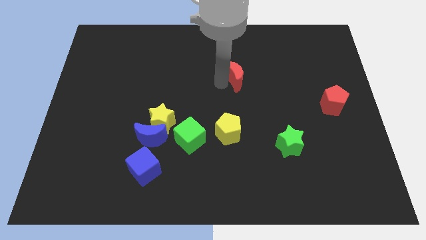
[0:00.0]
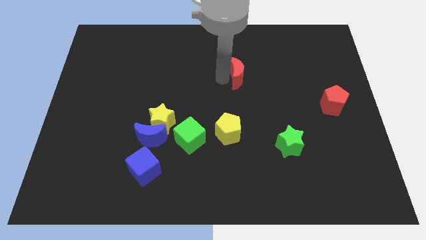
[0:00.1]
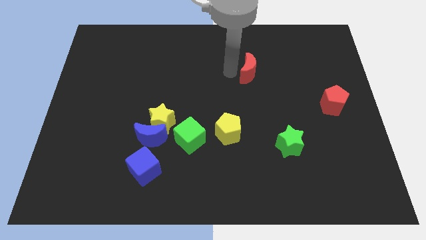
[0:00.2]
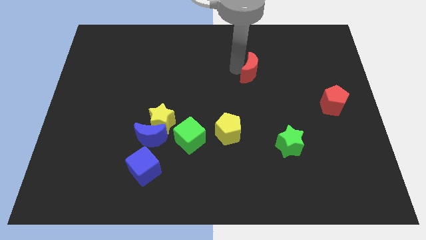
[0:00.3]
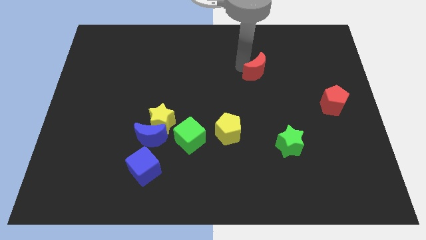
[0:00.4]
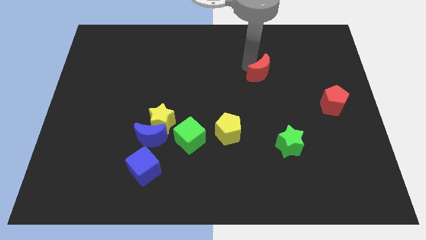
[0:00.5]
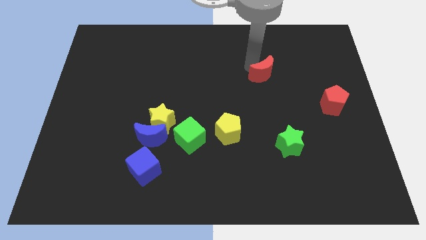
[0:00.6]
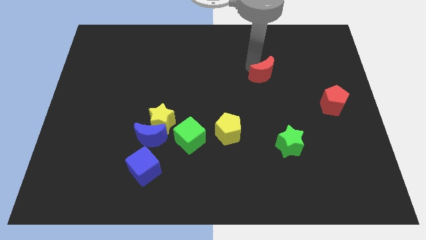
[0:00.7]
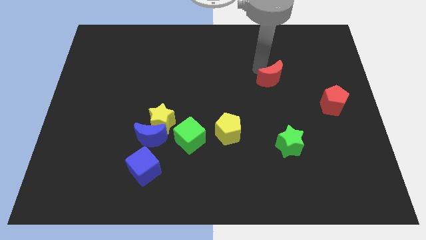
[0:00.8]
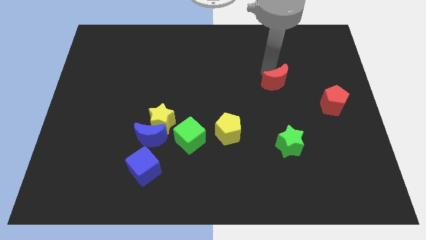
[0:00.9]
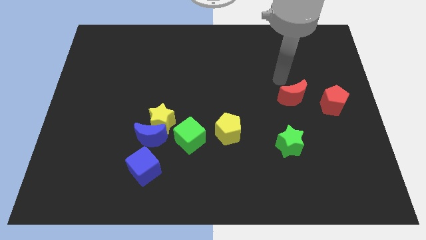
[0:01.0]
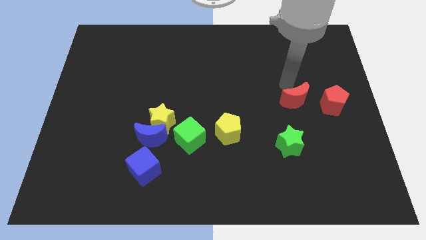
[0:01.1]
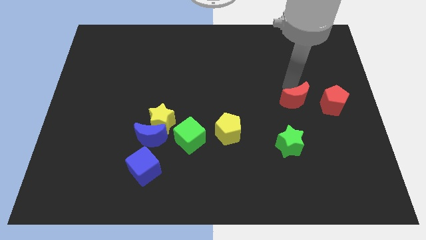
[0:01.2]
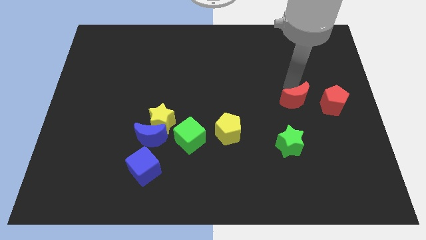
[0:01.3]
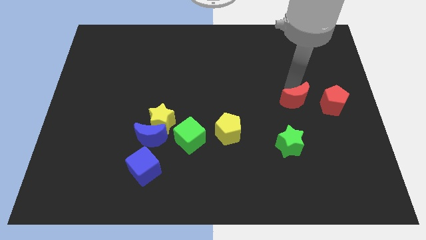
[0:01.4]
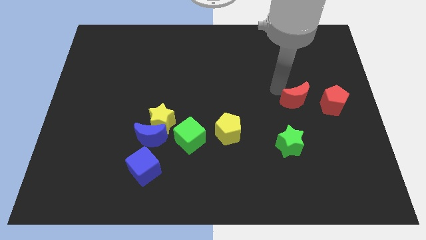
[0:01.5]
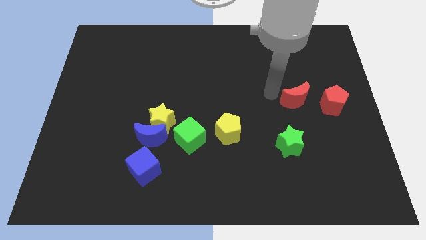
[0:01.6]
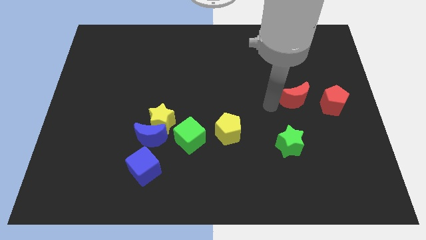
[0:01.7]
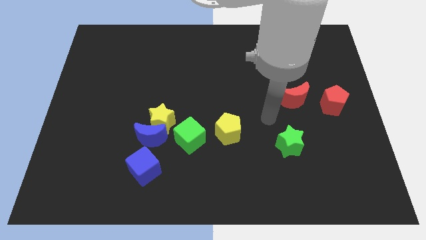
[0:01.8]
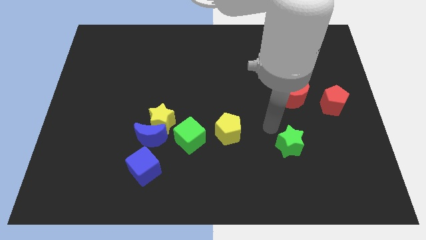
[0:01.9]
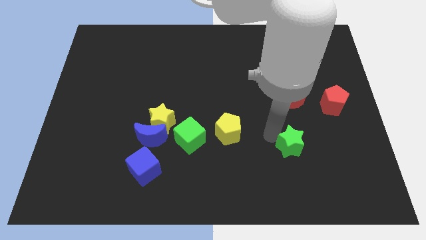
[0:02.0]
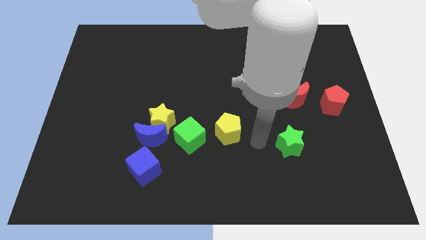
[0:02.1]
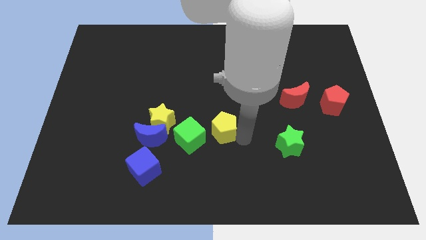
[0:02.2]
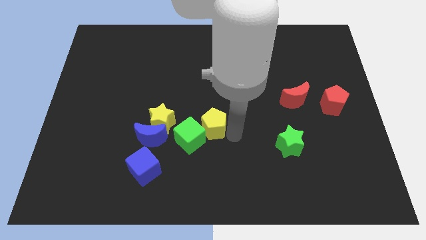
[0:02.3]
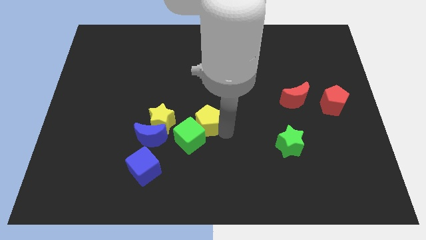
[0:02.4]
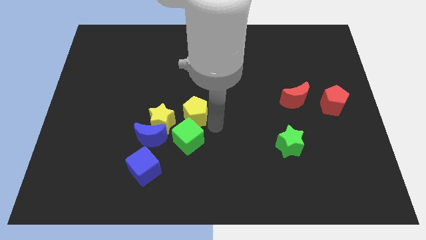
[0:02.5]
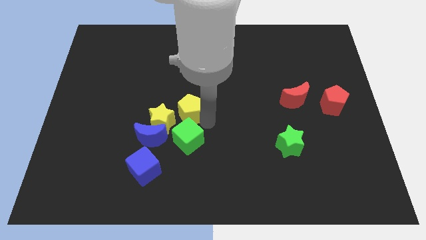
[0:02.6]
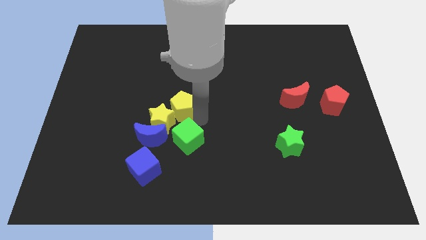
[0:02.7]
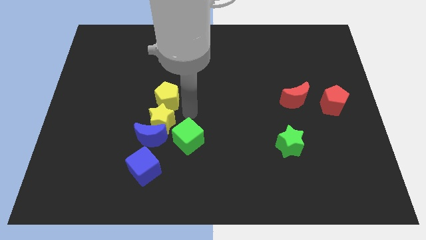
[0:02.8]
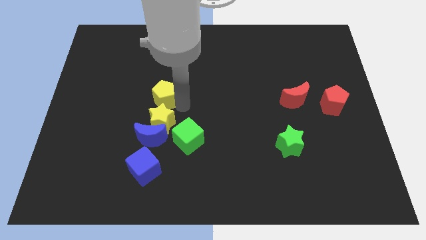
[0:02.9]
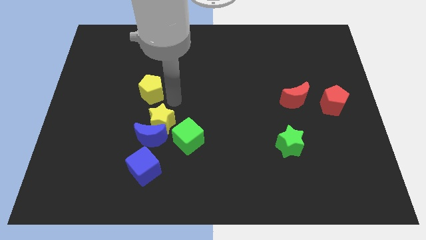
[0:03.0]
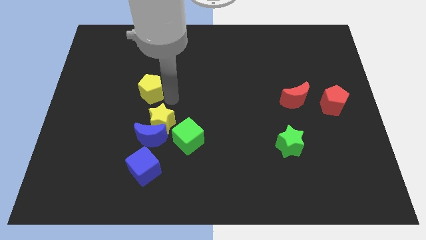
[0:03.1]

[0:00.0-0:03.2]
place the red moon and the yellow pentagon horizontally

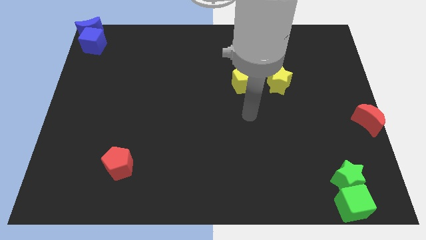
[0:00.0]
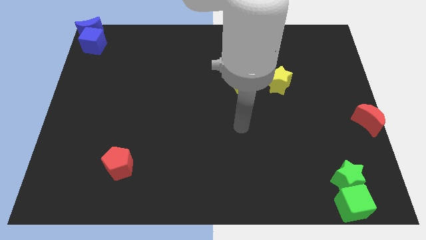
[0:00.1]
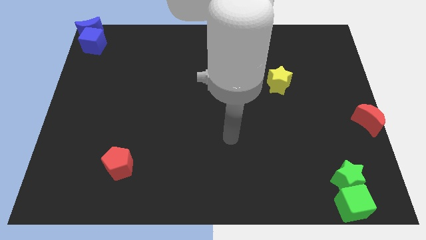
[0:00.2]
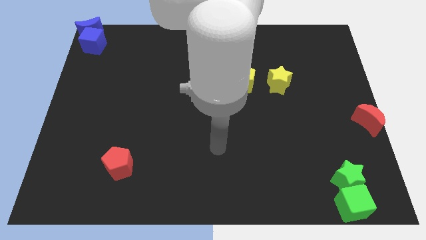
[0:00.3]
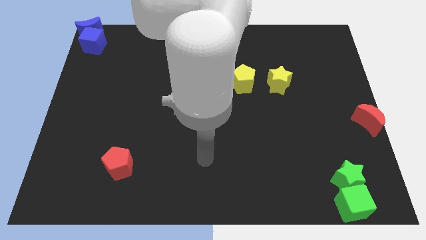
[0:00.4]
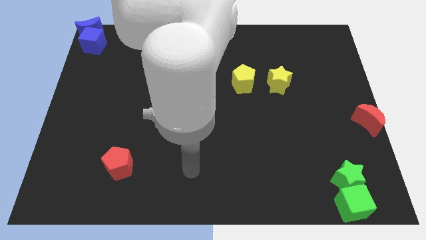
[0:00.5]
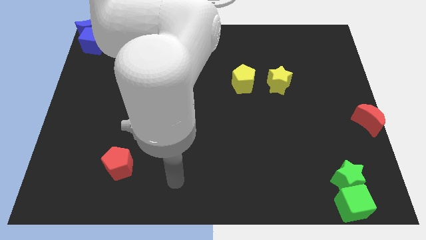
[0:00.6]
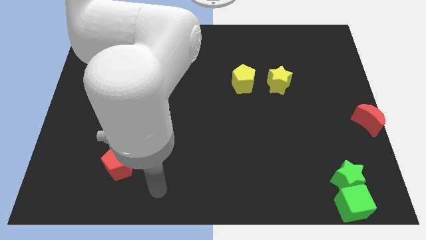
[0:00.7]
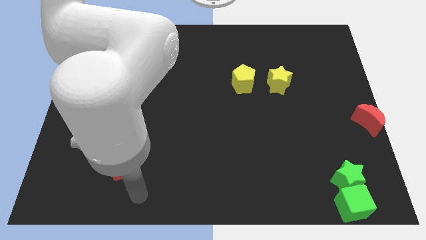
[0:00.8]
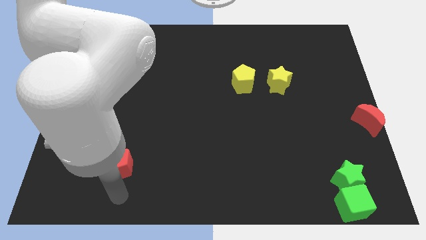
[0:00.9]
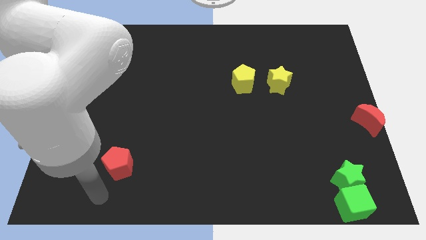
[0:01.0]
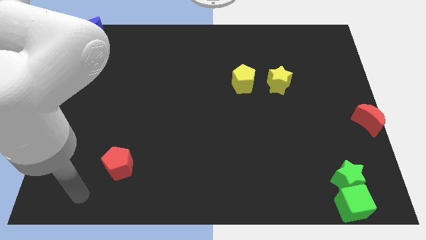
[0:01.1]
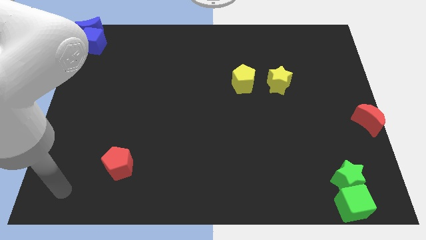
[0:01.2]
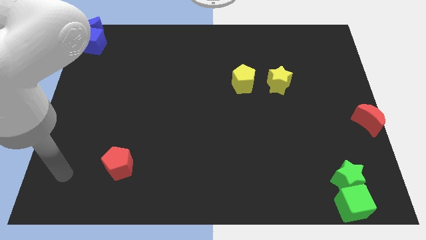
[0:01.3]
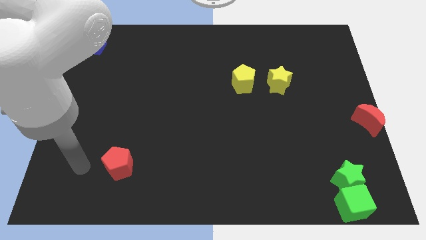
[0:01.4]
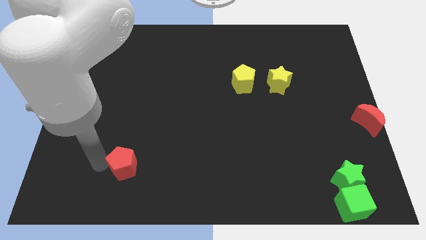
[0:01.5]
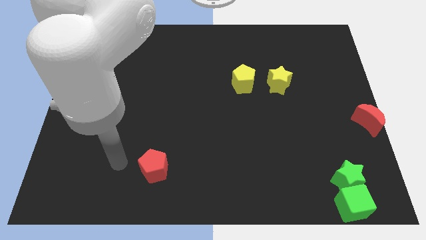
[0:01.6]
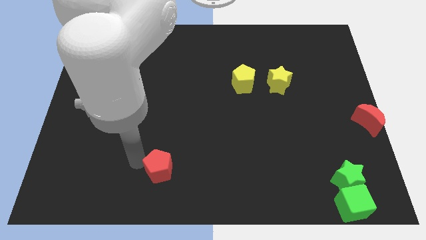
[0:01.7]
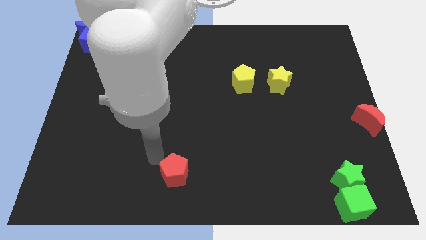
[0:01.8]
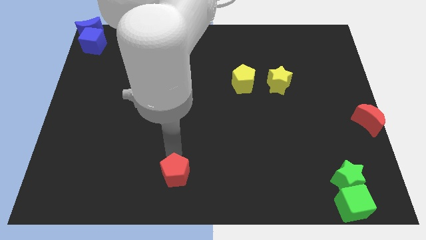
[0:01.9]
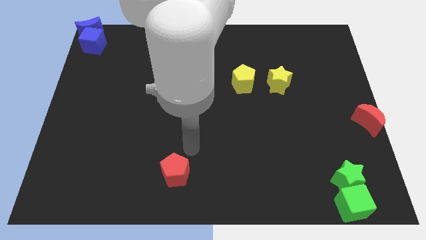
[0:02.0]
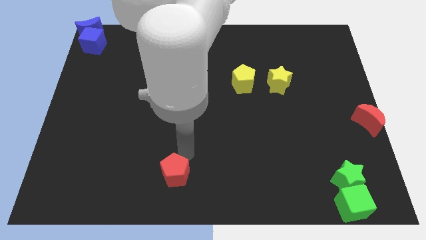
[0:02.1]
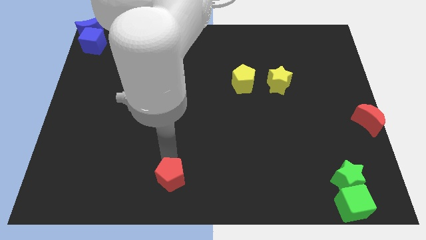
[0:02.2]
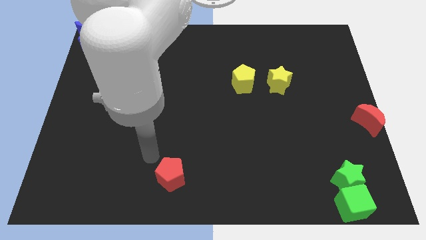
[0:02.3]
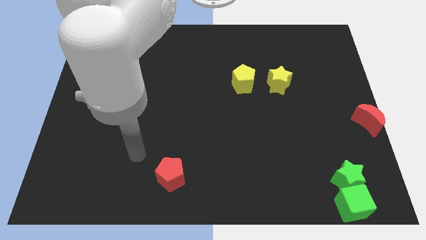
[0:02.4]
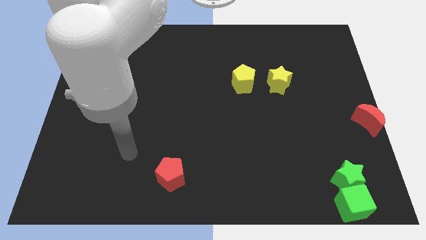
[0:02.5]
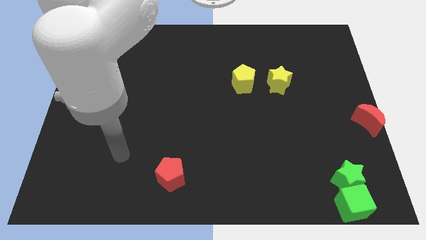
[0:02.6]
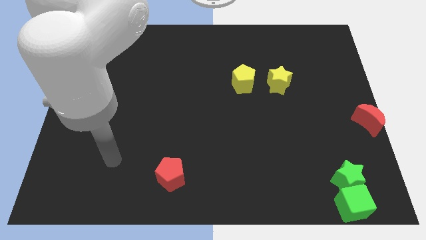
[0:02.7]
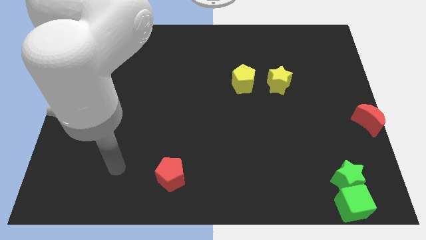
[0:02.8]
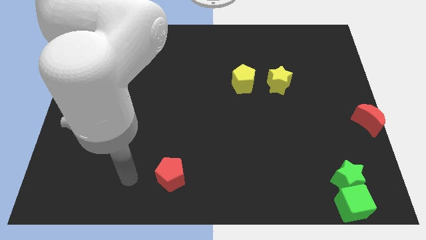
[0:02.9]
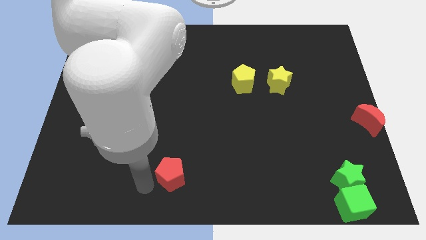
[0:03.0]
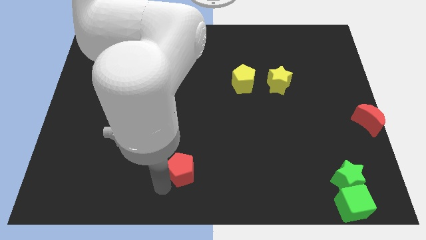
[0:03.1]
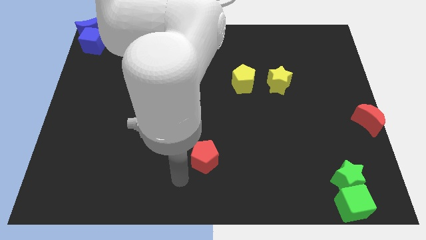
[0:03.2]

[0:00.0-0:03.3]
move the red pentagon to the bottom center

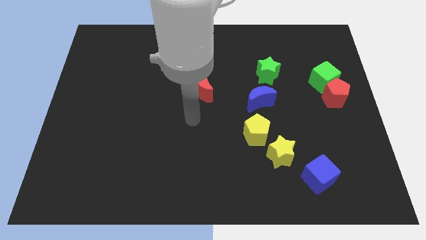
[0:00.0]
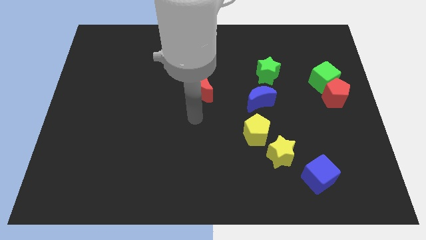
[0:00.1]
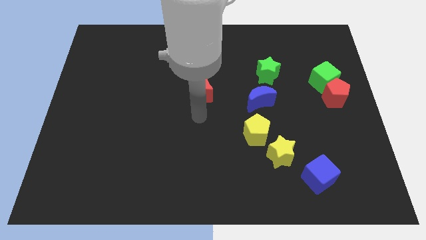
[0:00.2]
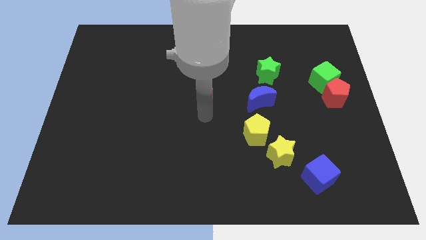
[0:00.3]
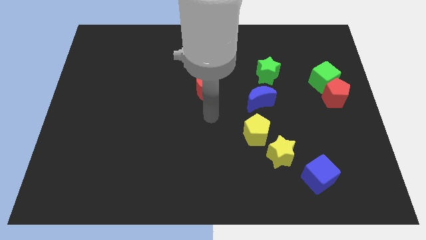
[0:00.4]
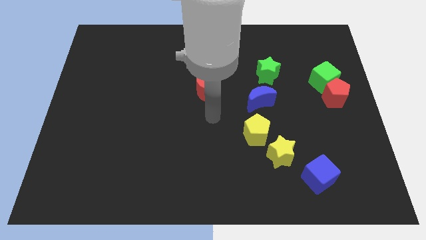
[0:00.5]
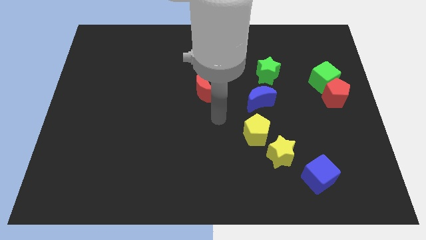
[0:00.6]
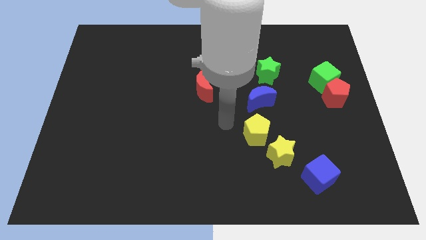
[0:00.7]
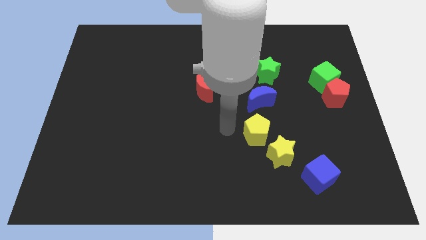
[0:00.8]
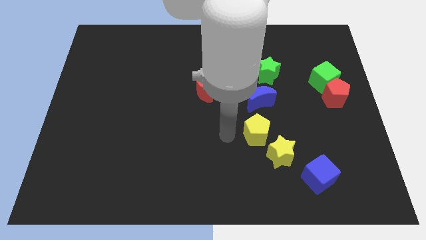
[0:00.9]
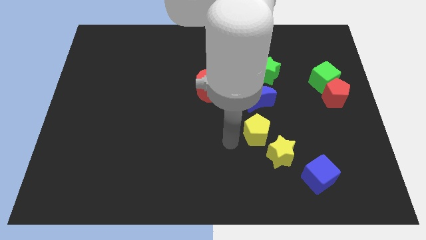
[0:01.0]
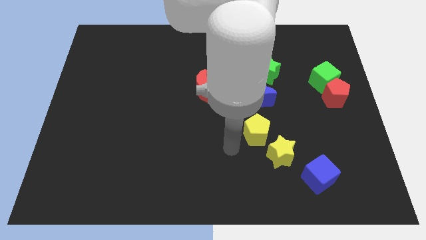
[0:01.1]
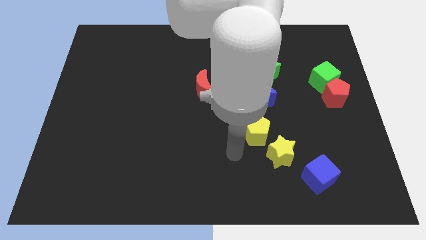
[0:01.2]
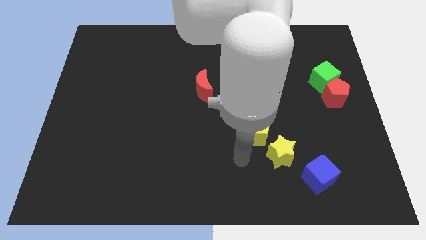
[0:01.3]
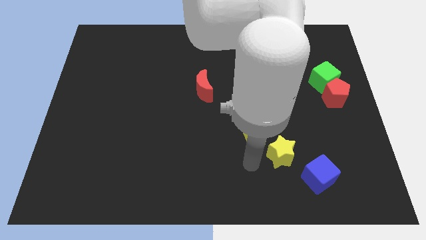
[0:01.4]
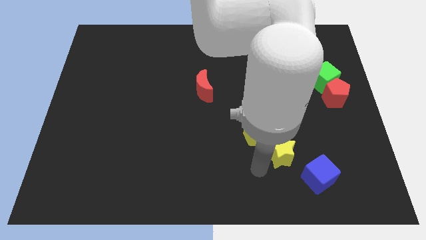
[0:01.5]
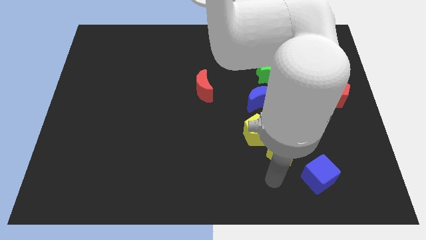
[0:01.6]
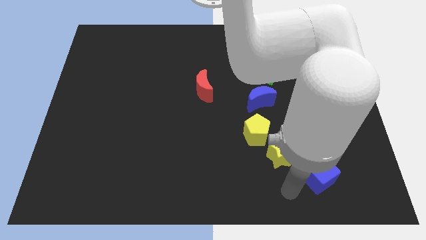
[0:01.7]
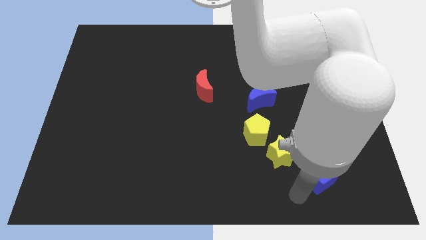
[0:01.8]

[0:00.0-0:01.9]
move your arm close to the blue cube

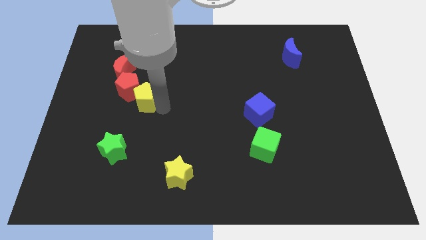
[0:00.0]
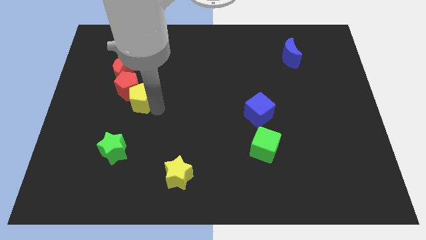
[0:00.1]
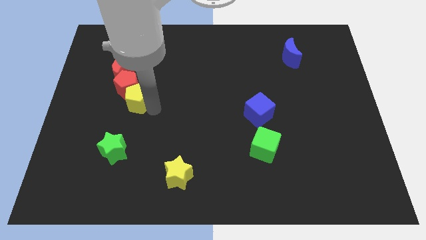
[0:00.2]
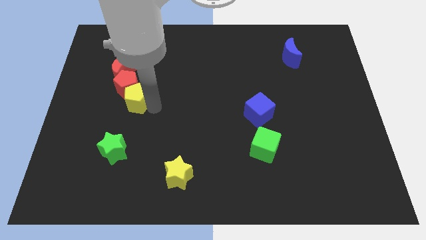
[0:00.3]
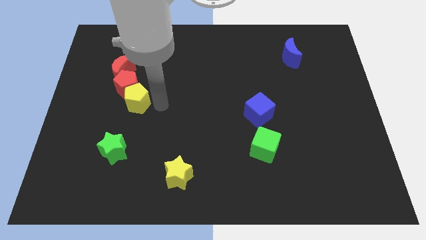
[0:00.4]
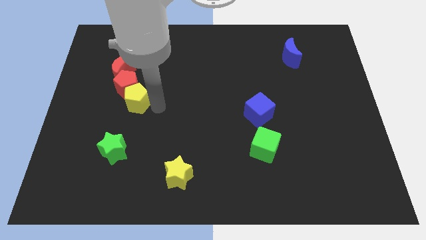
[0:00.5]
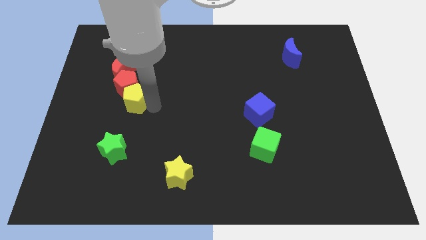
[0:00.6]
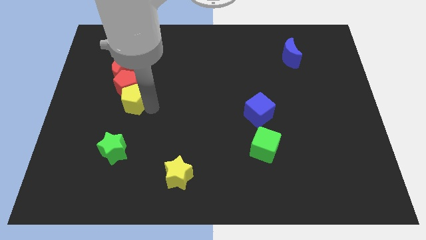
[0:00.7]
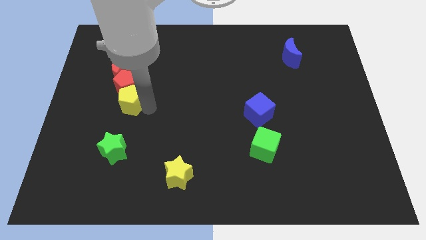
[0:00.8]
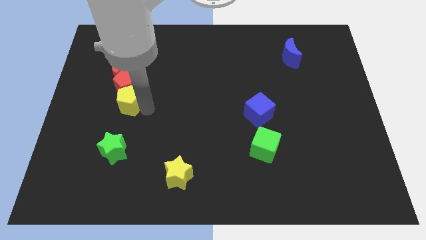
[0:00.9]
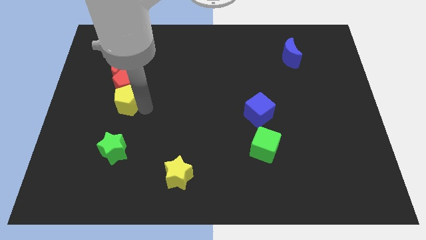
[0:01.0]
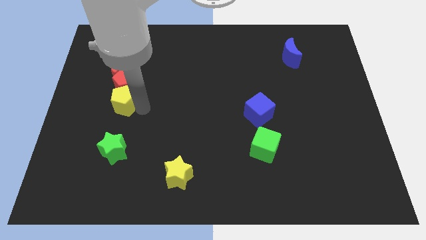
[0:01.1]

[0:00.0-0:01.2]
place yellow pentagon below red pentagon
